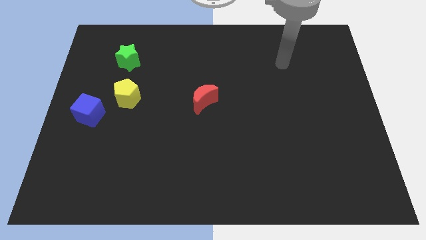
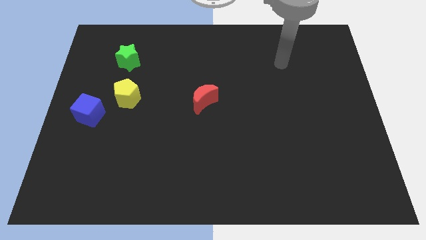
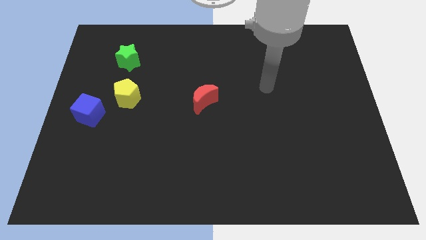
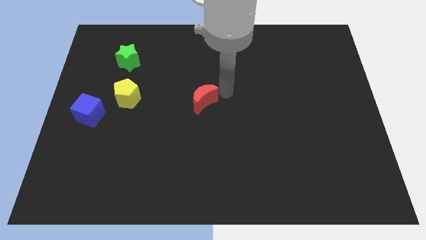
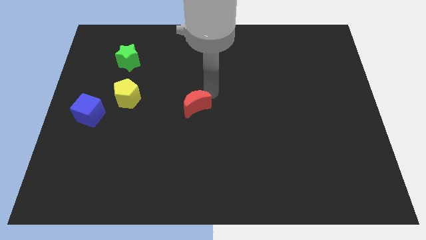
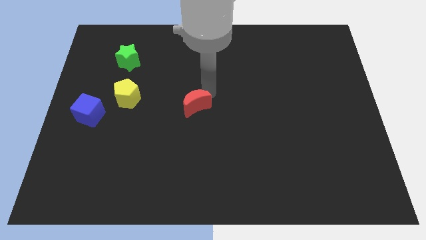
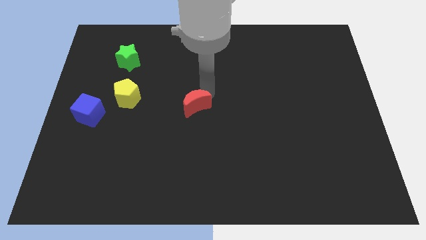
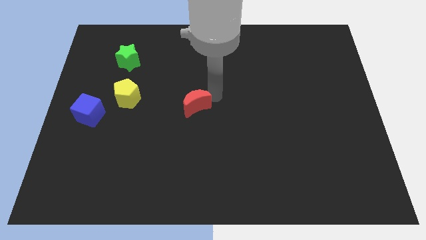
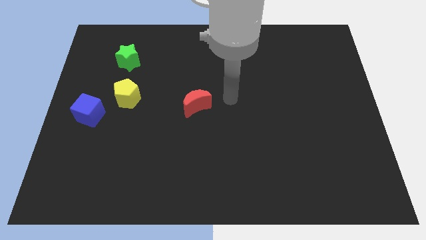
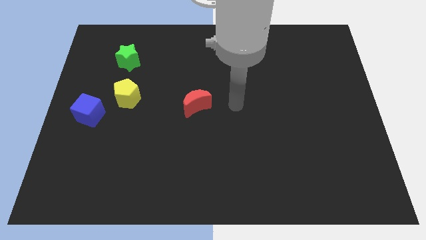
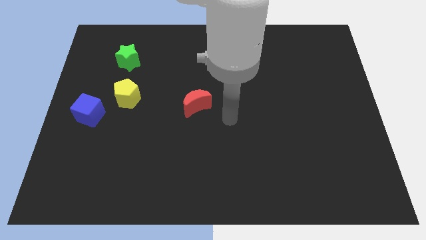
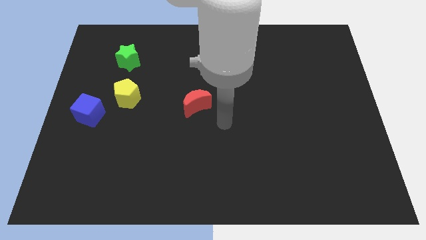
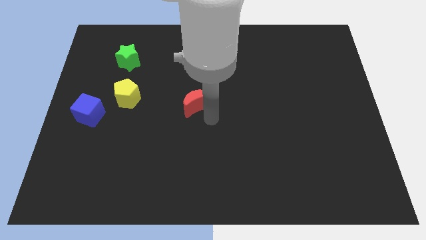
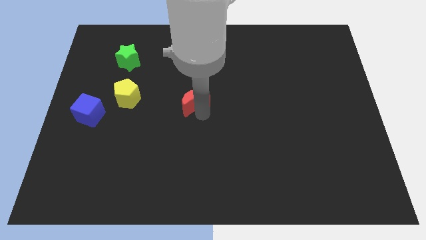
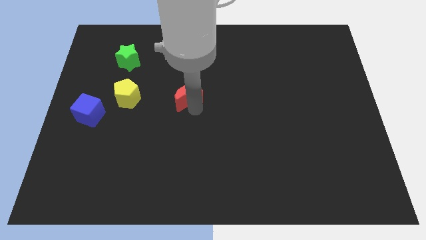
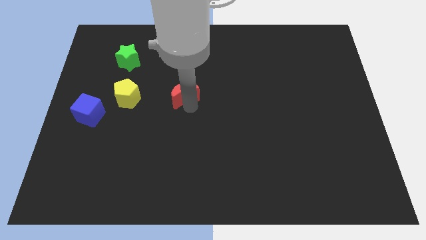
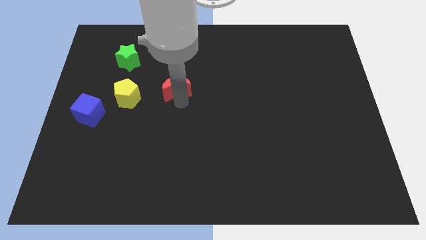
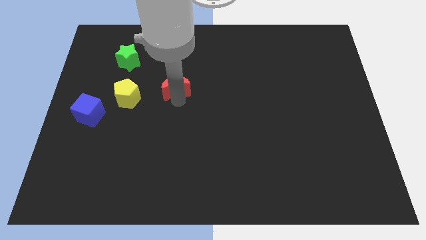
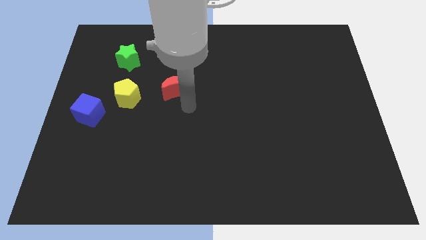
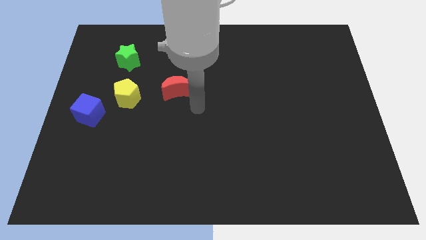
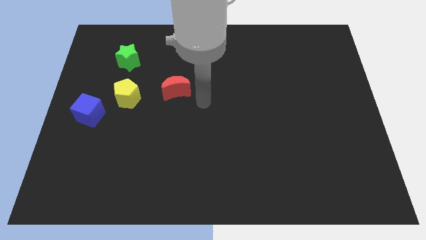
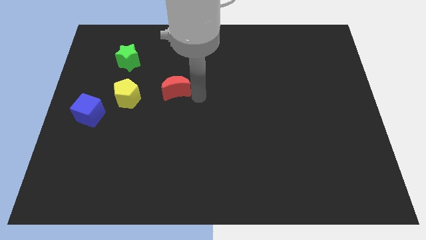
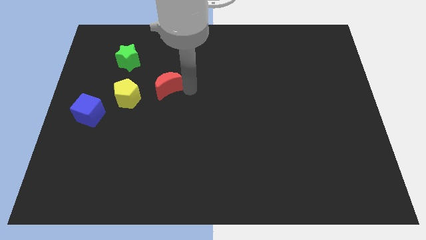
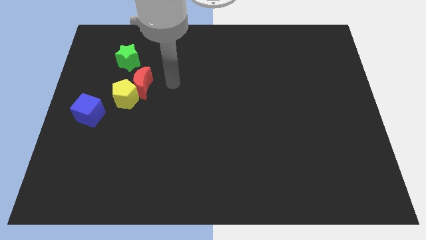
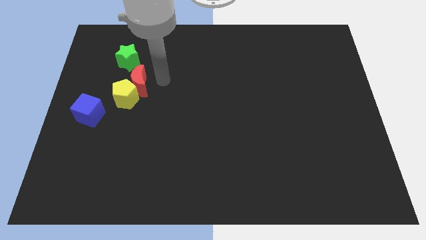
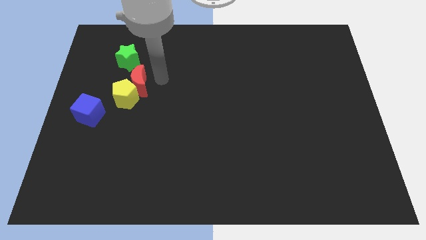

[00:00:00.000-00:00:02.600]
put the moon to the yellow pentagon

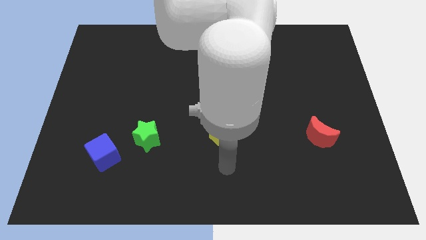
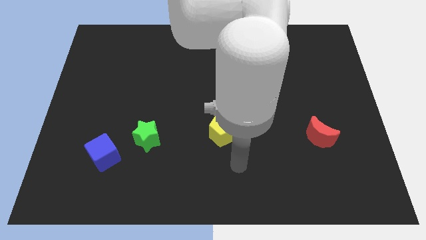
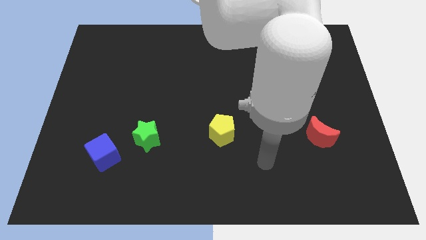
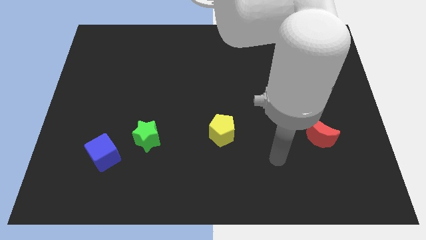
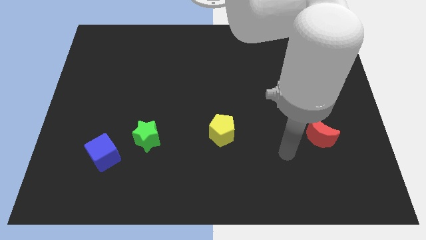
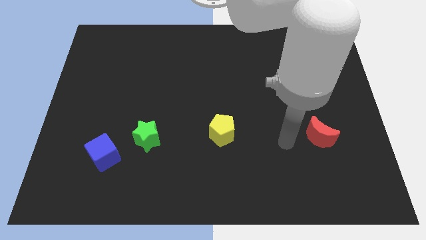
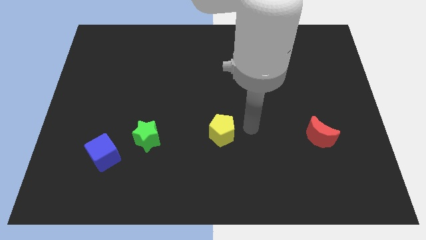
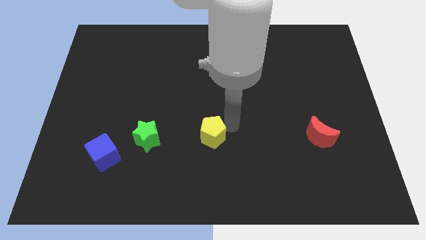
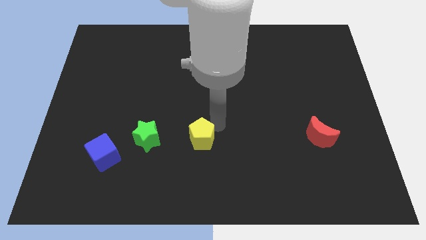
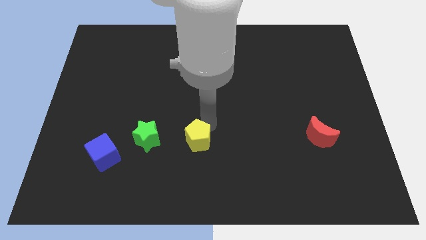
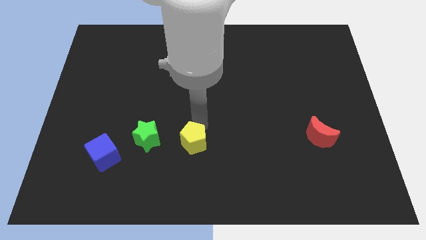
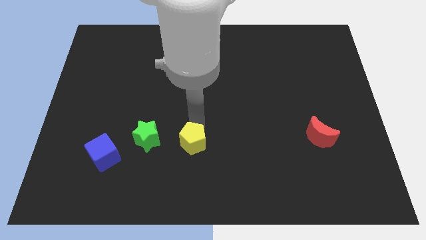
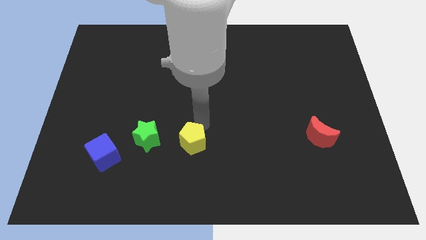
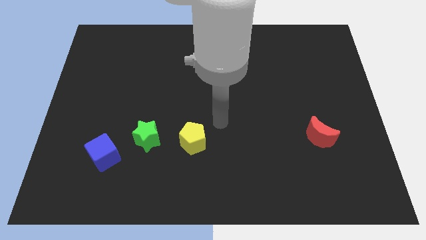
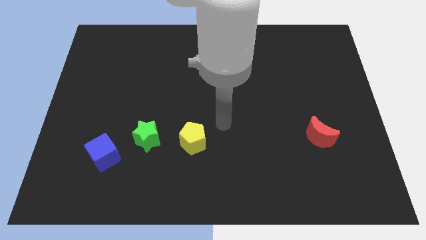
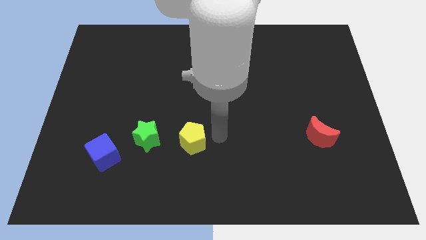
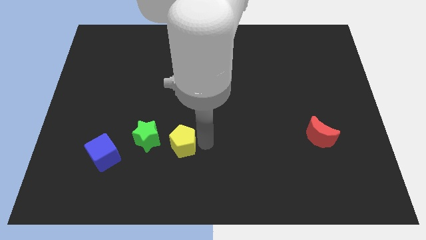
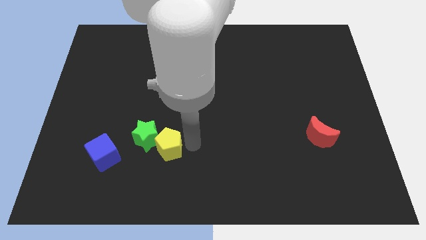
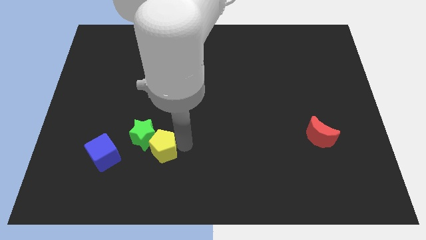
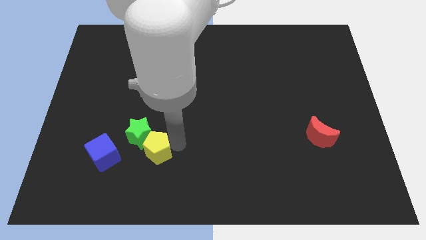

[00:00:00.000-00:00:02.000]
move the yellow pentagon towards the green star

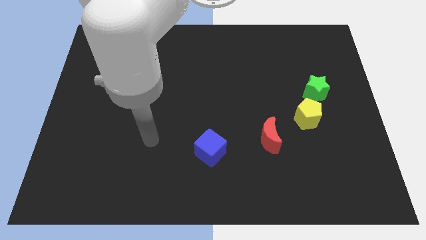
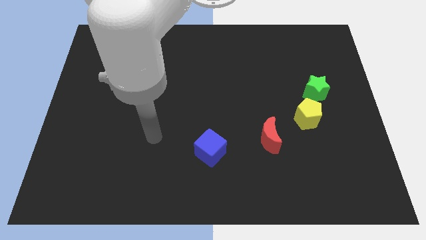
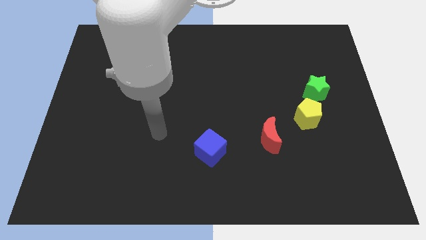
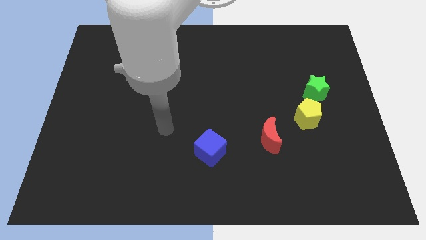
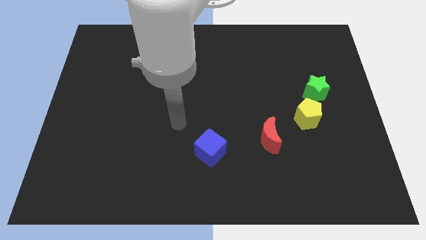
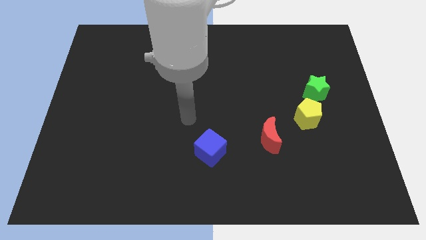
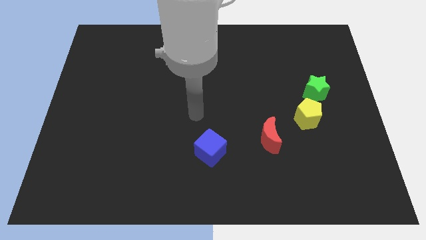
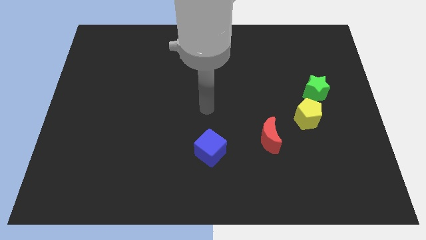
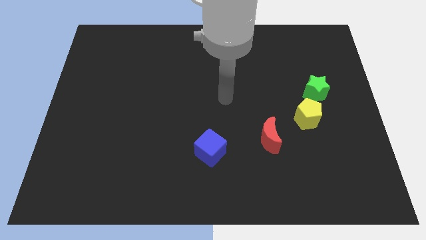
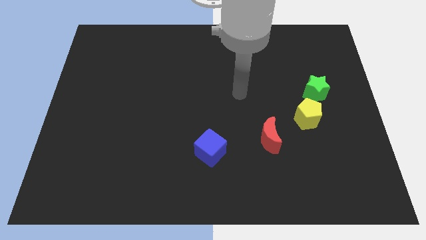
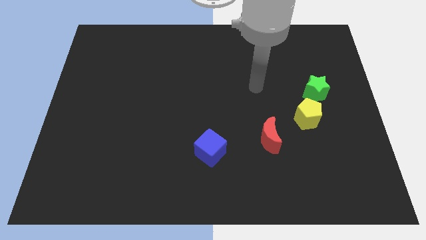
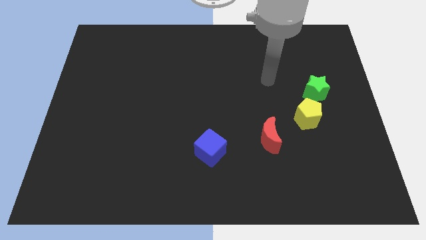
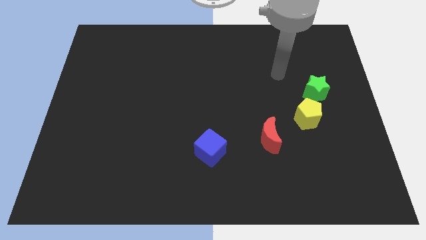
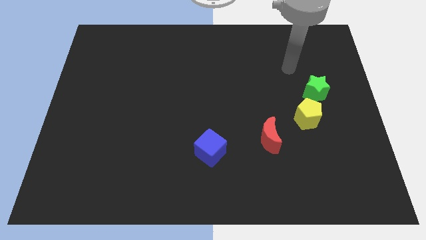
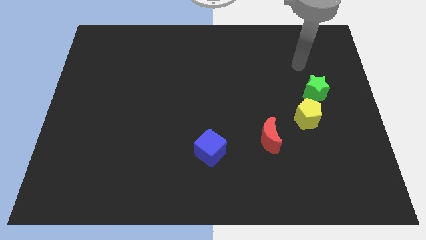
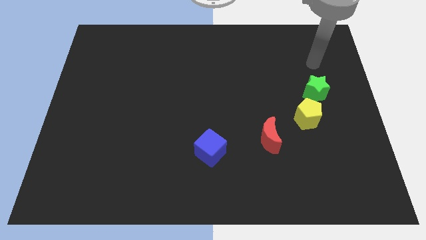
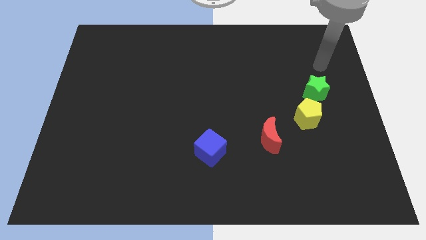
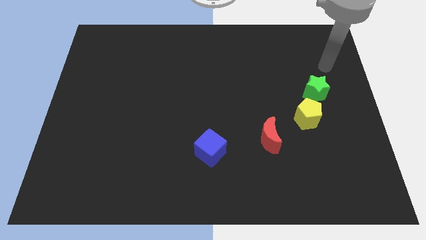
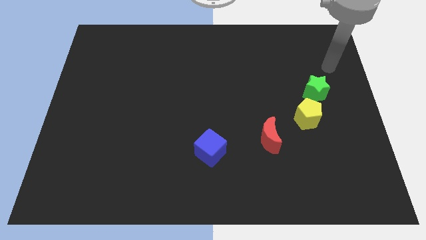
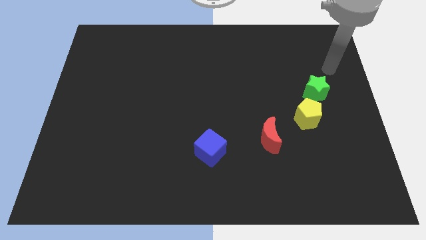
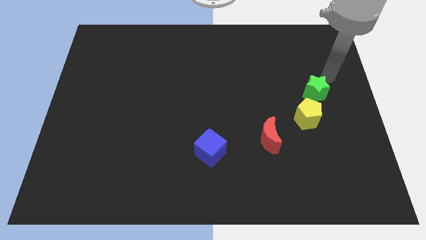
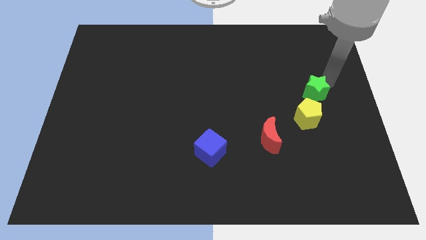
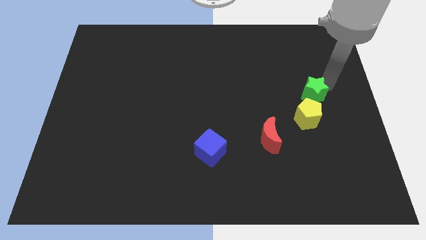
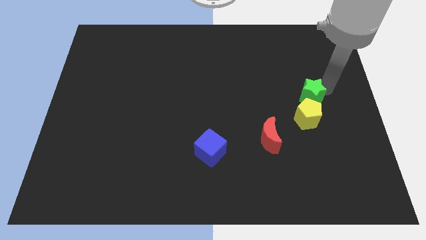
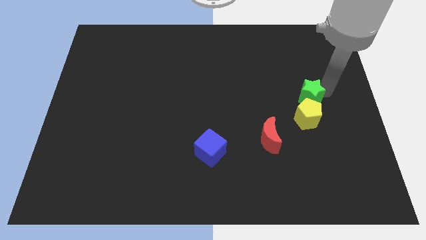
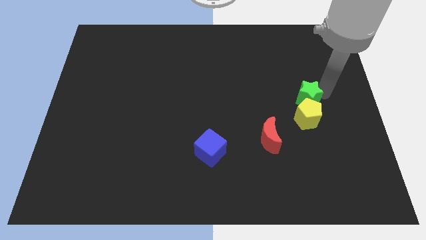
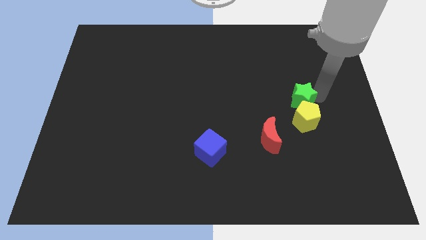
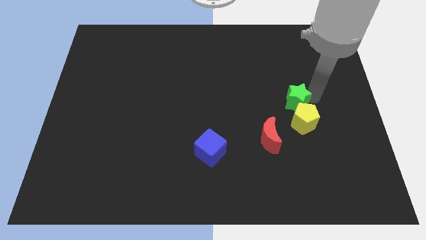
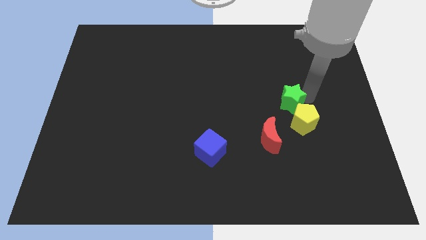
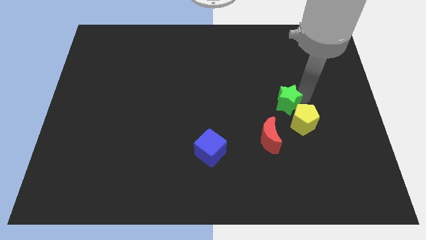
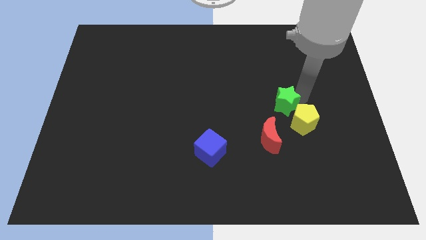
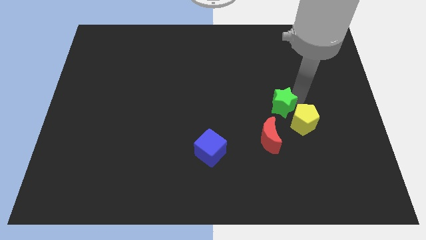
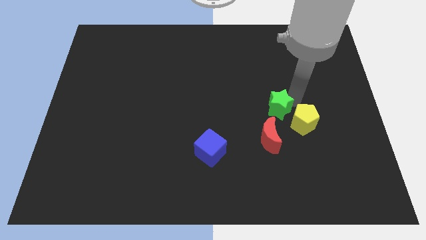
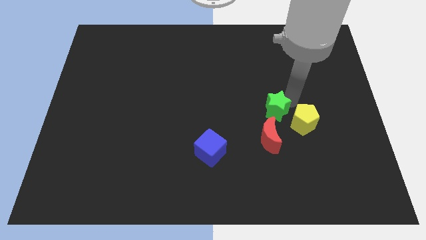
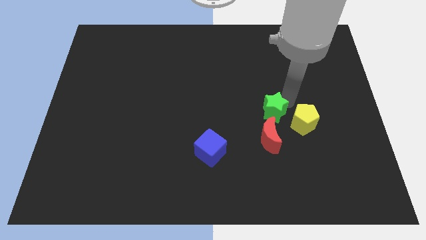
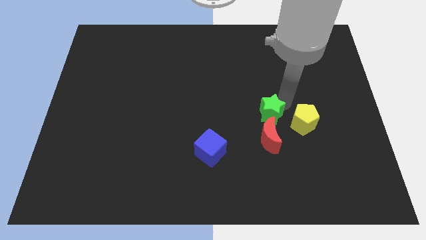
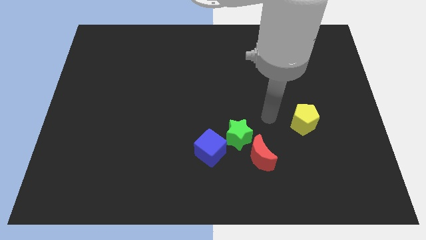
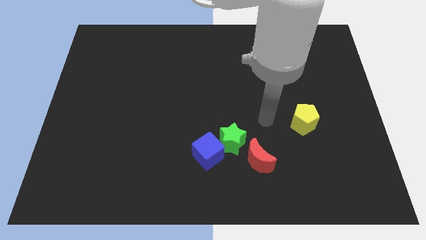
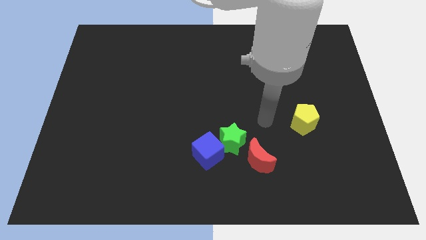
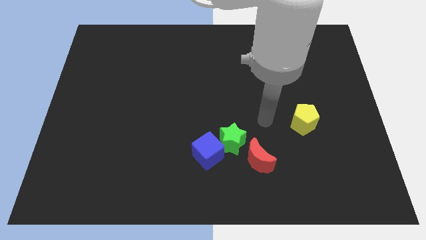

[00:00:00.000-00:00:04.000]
push the green block towards the blue block

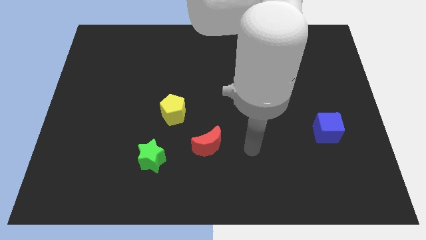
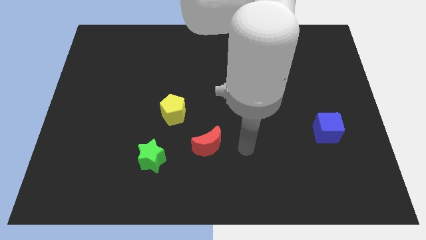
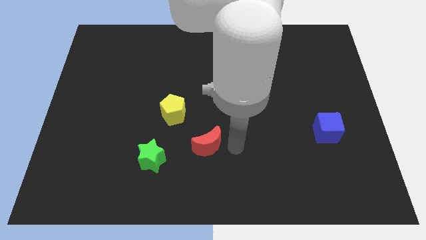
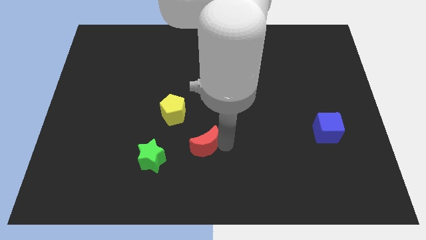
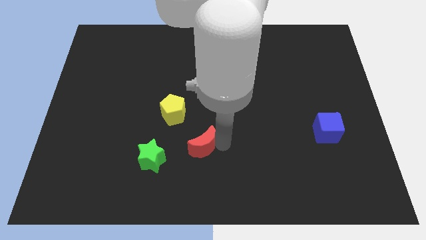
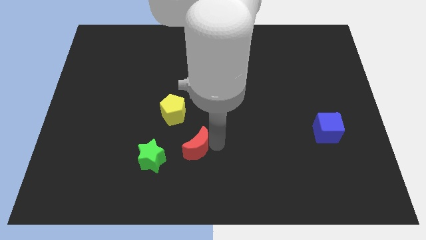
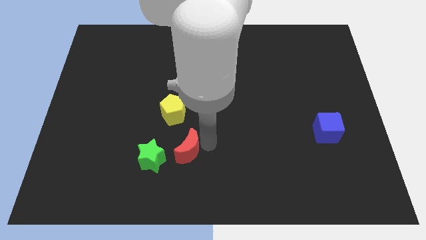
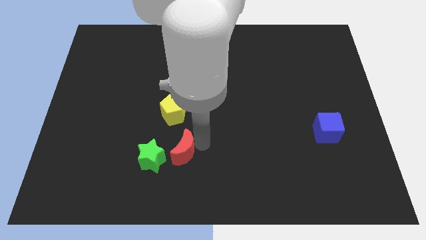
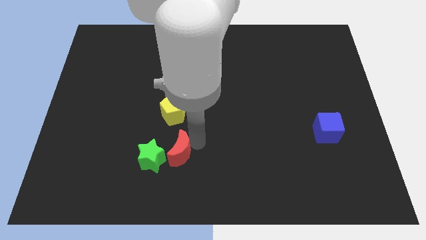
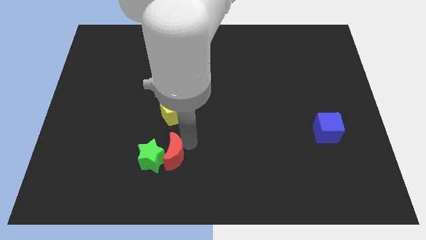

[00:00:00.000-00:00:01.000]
slide the red moon towards the green block
